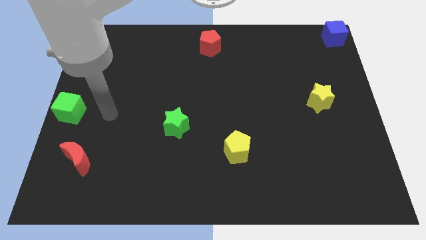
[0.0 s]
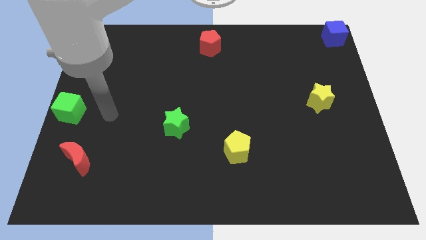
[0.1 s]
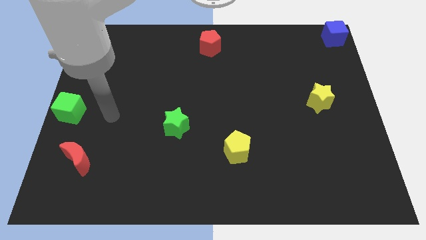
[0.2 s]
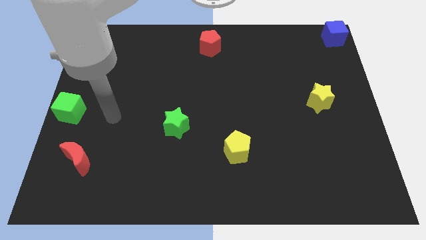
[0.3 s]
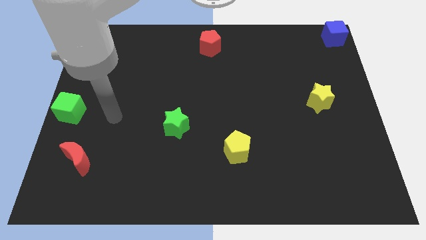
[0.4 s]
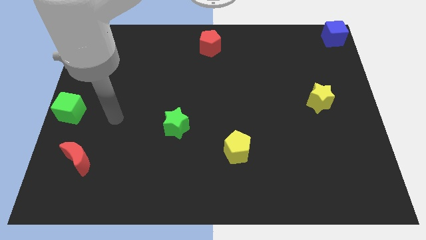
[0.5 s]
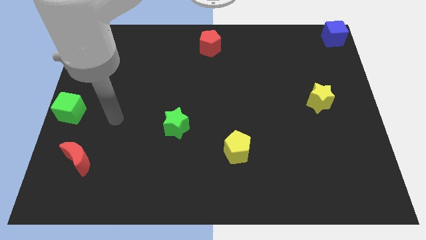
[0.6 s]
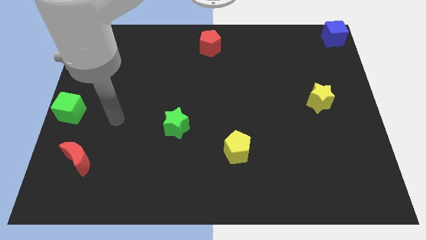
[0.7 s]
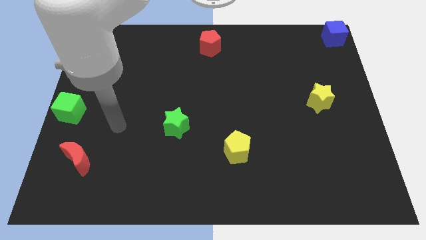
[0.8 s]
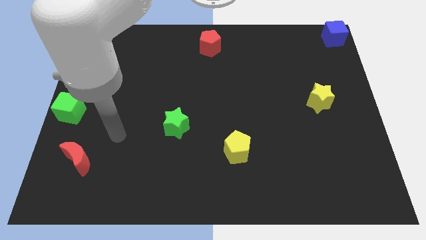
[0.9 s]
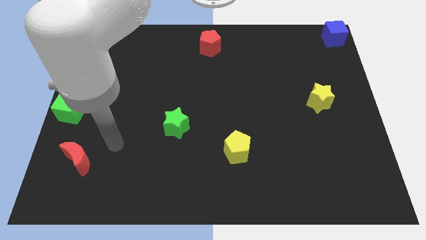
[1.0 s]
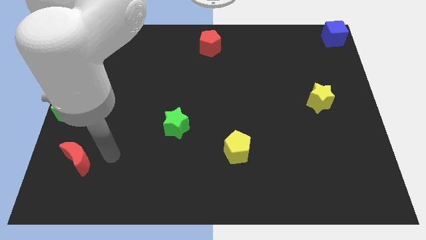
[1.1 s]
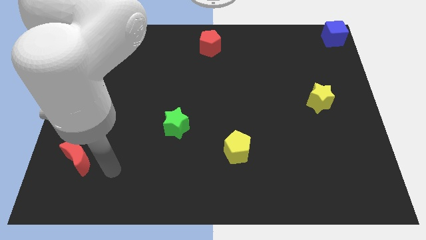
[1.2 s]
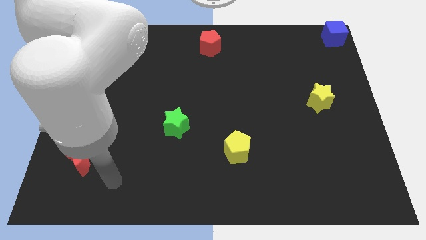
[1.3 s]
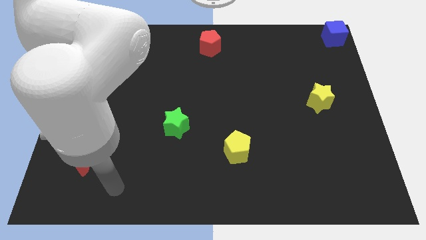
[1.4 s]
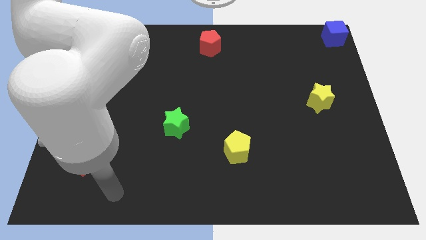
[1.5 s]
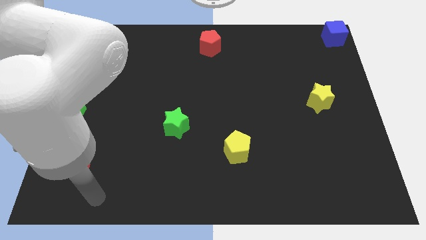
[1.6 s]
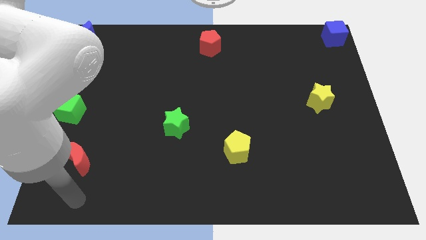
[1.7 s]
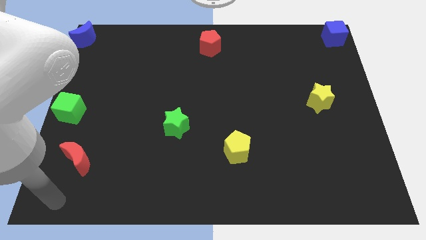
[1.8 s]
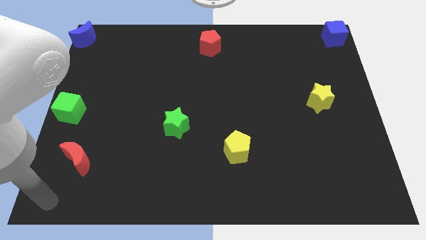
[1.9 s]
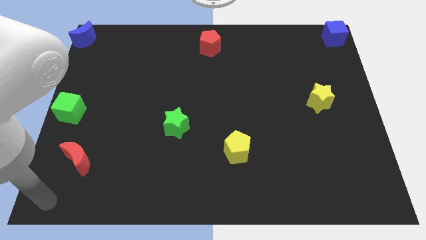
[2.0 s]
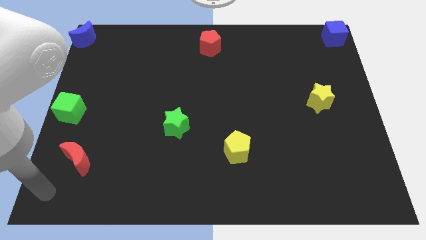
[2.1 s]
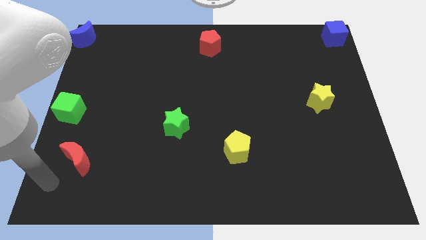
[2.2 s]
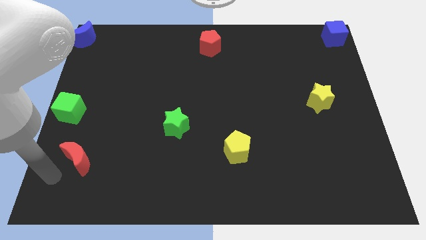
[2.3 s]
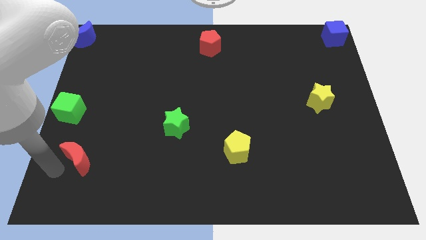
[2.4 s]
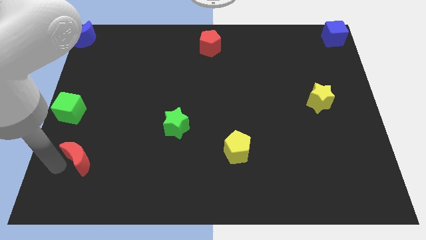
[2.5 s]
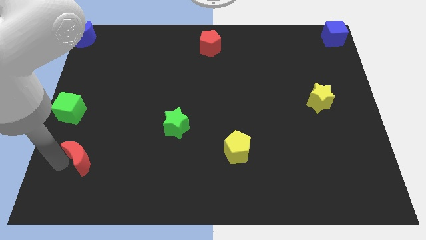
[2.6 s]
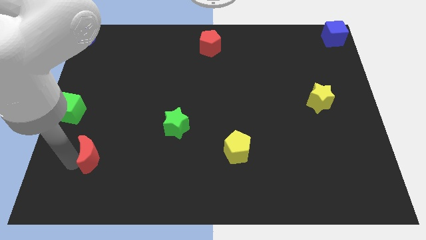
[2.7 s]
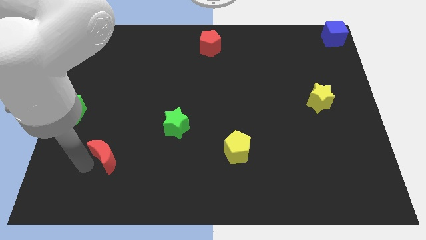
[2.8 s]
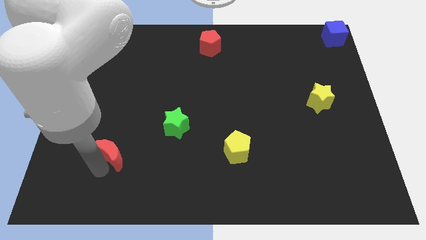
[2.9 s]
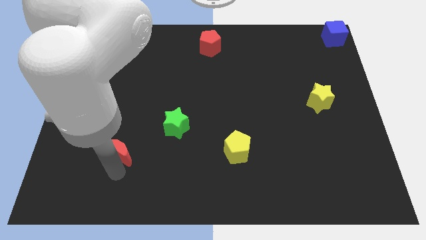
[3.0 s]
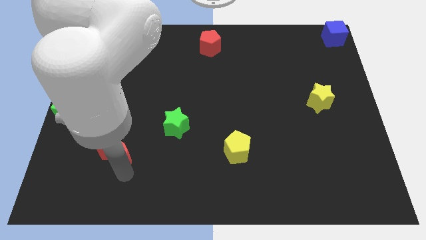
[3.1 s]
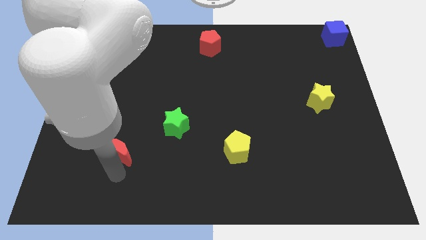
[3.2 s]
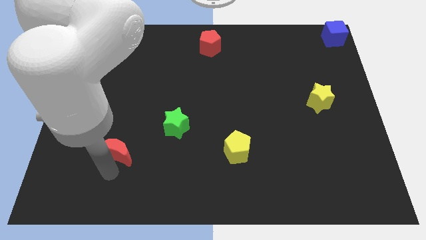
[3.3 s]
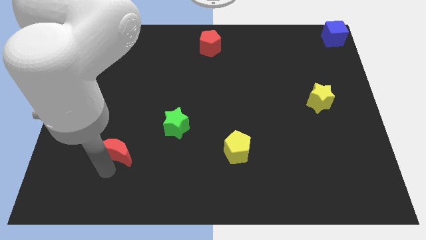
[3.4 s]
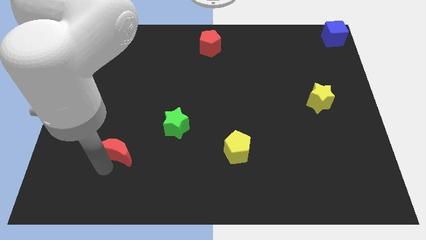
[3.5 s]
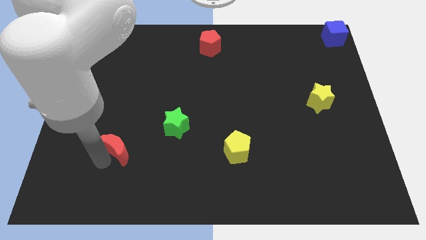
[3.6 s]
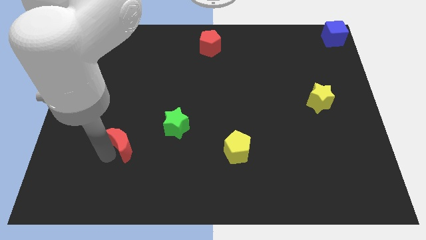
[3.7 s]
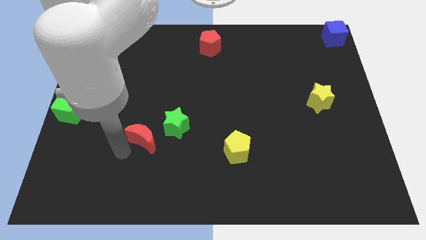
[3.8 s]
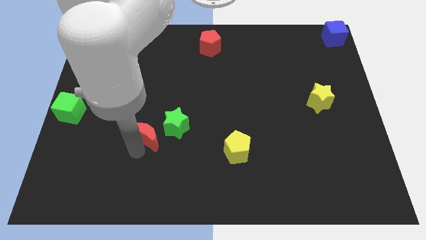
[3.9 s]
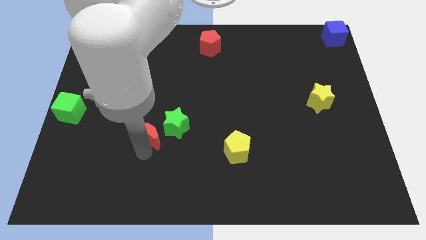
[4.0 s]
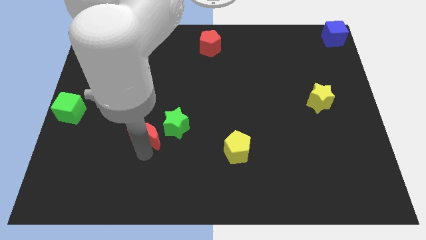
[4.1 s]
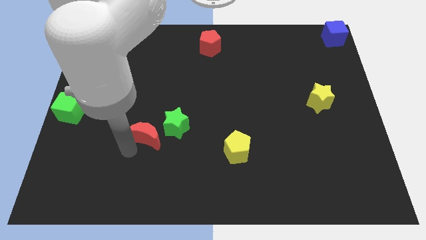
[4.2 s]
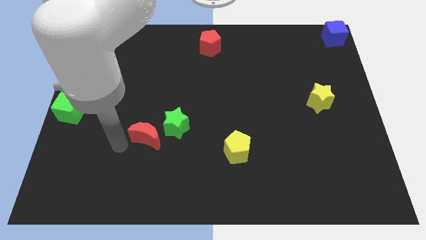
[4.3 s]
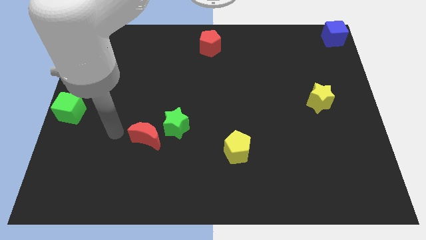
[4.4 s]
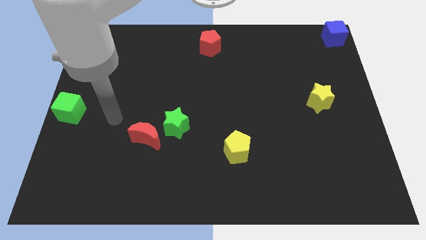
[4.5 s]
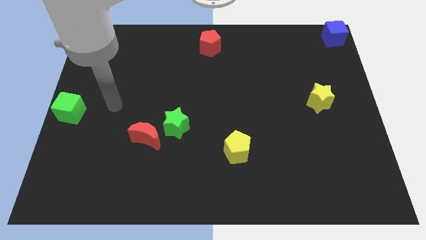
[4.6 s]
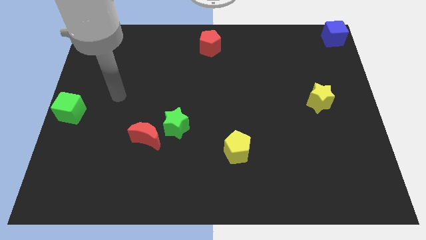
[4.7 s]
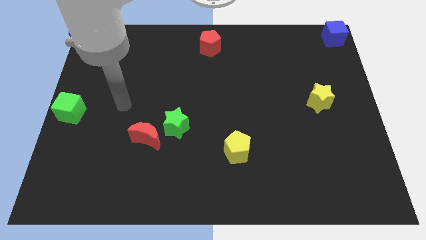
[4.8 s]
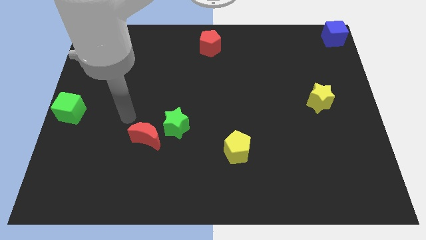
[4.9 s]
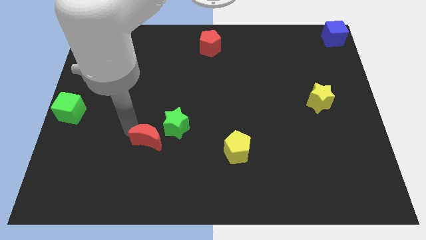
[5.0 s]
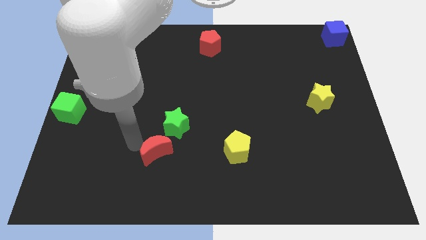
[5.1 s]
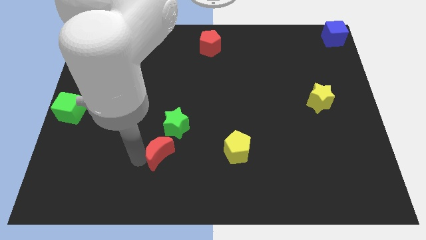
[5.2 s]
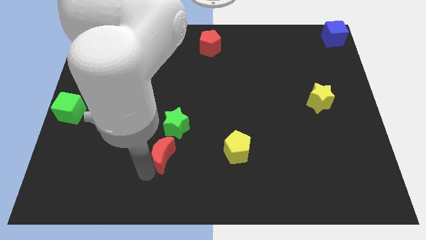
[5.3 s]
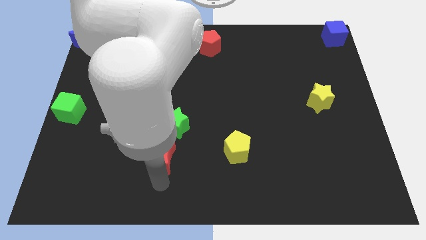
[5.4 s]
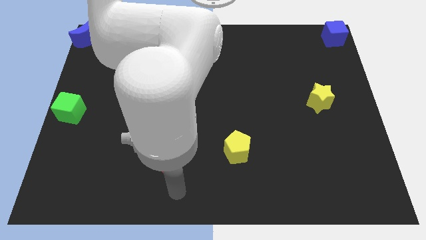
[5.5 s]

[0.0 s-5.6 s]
push the red moon below the green star

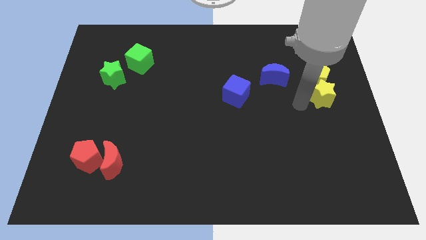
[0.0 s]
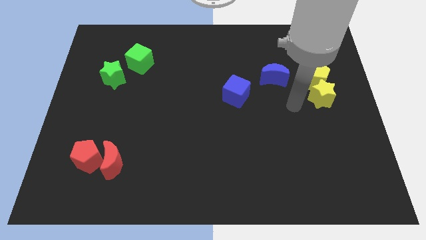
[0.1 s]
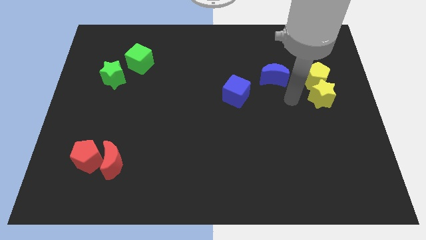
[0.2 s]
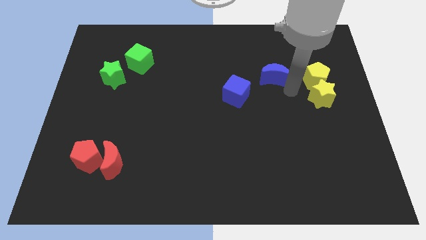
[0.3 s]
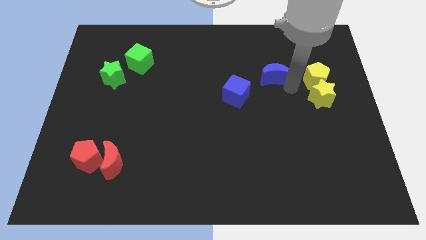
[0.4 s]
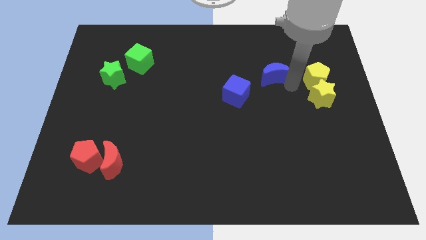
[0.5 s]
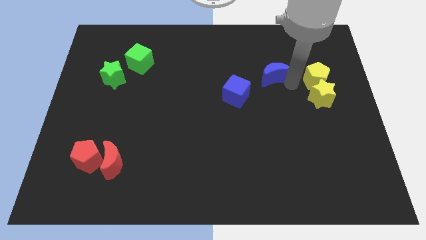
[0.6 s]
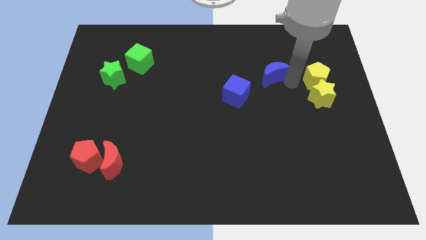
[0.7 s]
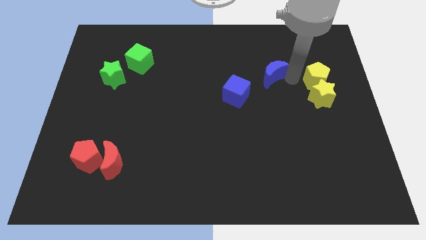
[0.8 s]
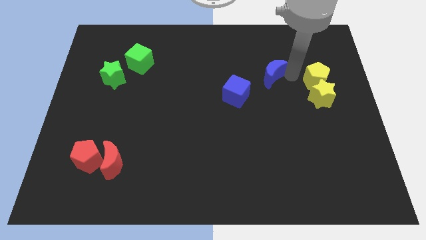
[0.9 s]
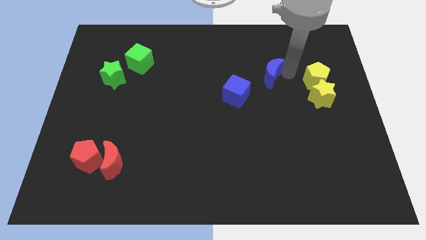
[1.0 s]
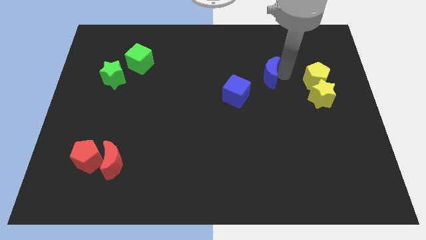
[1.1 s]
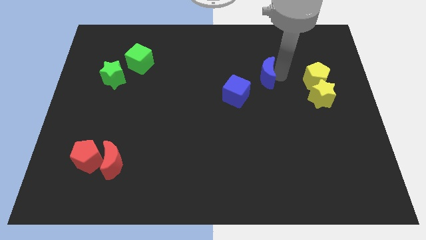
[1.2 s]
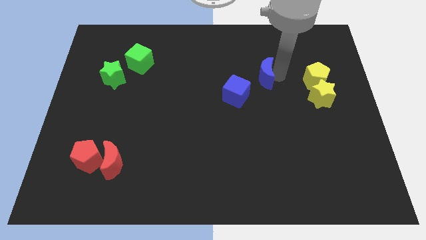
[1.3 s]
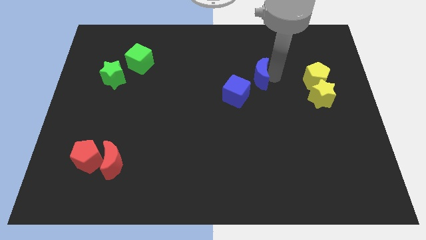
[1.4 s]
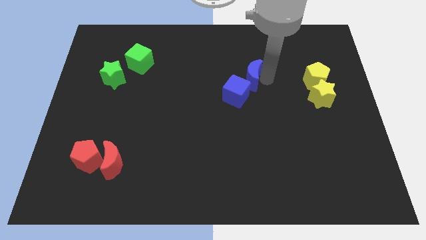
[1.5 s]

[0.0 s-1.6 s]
move the blue crescent close to blue cube

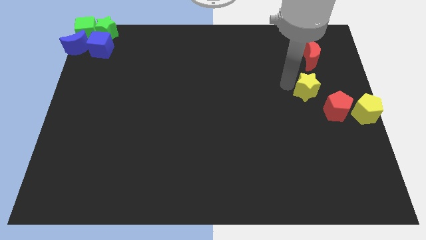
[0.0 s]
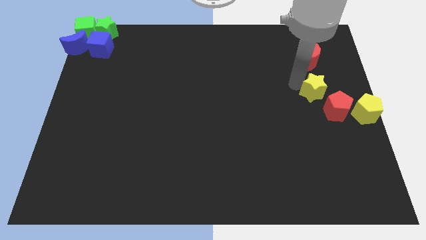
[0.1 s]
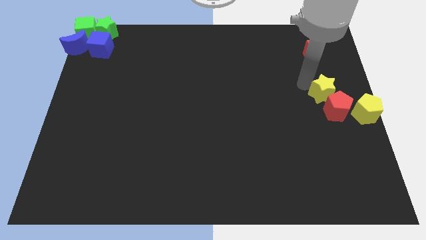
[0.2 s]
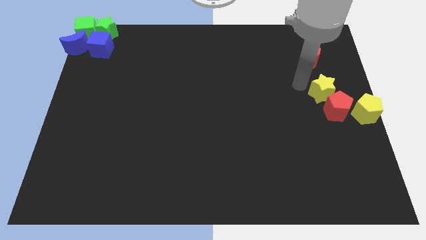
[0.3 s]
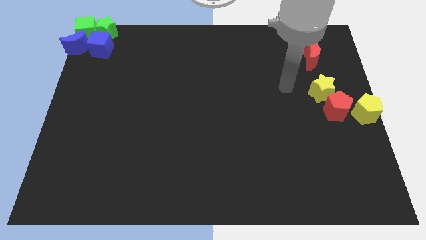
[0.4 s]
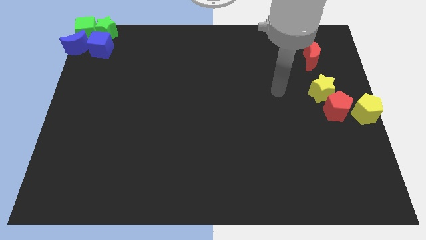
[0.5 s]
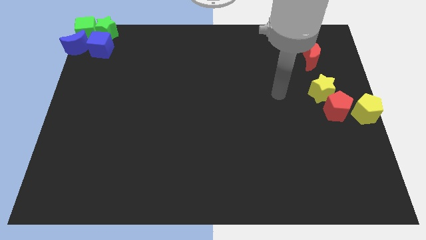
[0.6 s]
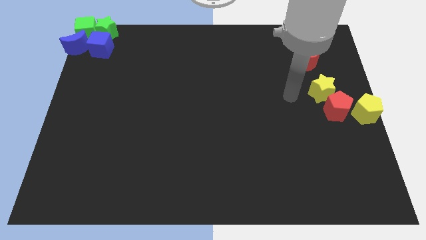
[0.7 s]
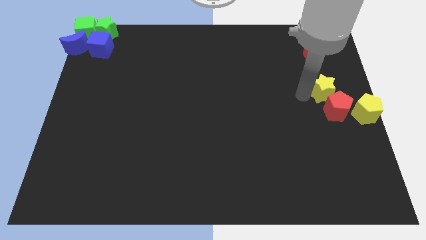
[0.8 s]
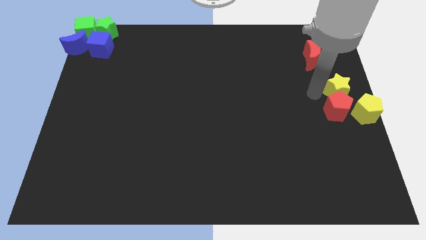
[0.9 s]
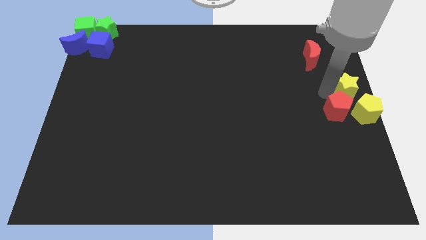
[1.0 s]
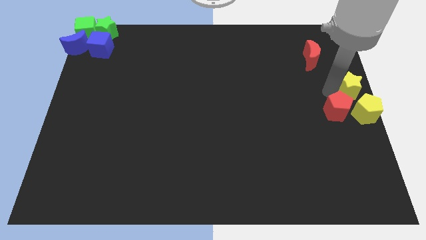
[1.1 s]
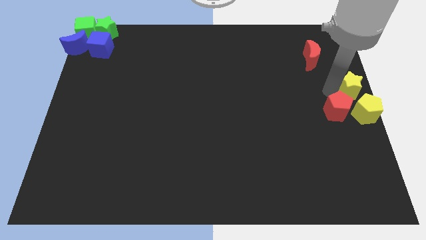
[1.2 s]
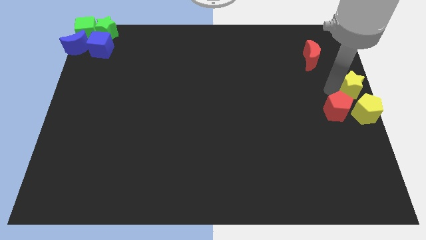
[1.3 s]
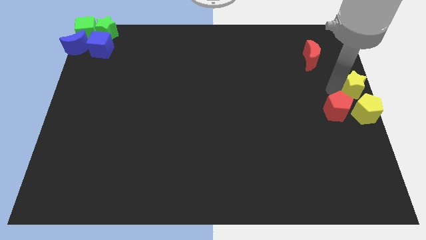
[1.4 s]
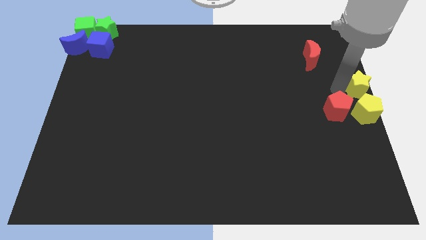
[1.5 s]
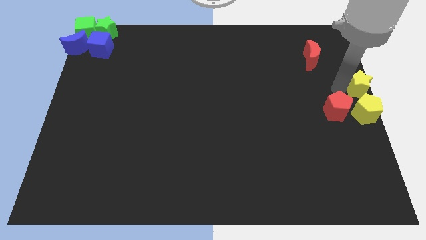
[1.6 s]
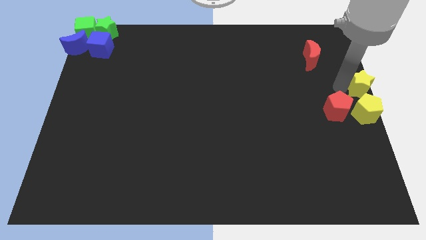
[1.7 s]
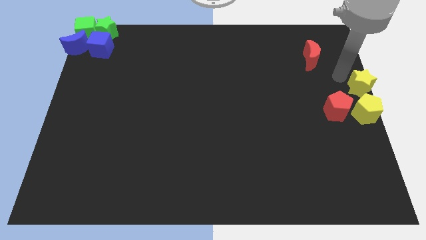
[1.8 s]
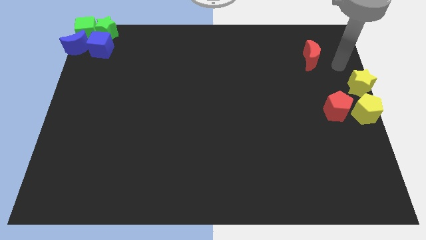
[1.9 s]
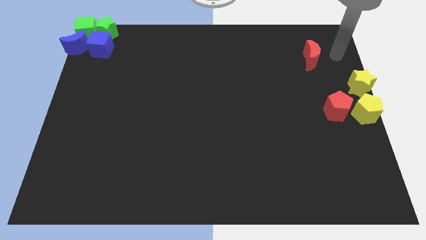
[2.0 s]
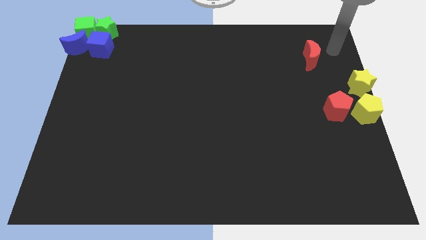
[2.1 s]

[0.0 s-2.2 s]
move yellow star to the center right
